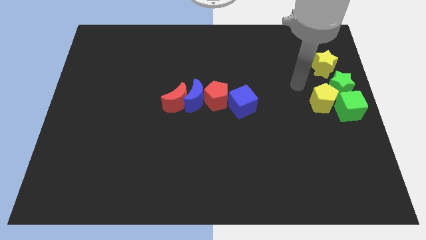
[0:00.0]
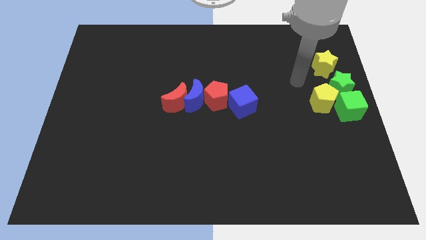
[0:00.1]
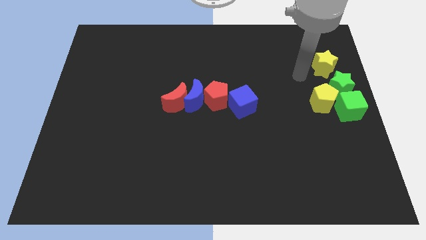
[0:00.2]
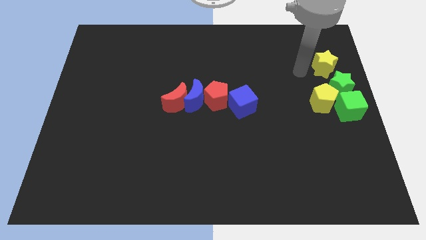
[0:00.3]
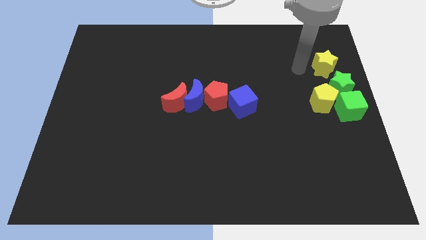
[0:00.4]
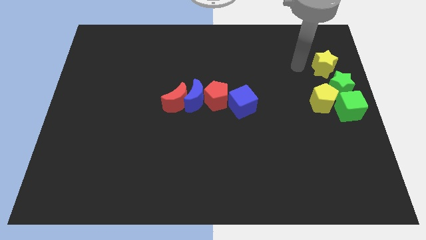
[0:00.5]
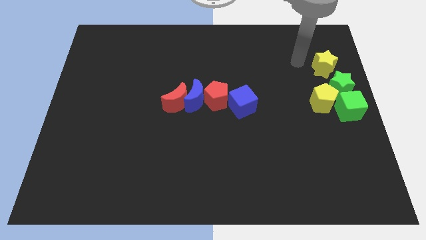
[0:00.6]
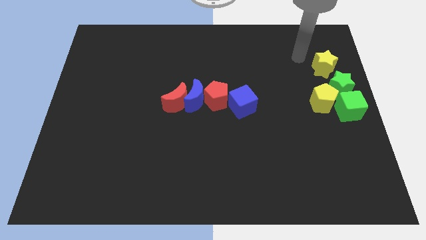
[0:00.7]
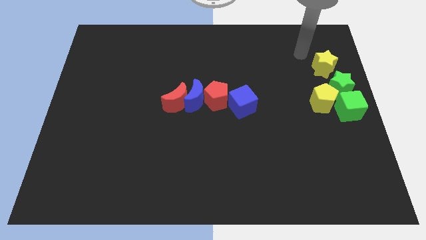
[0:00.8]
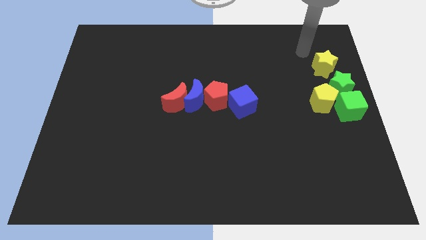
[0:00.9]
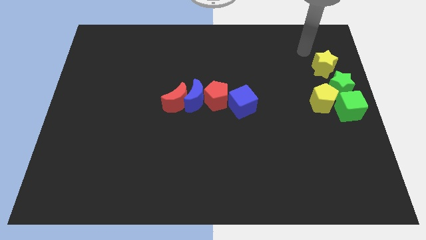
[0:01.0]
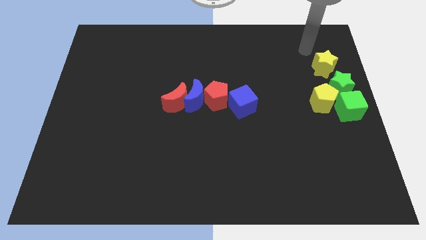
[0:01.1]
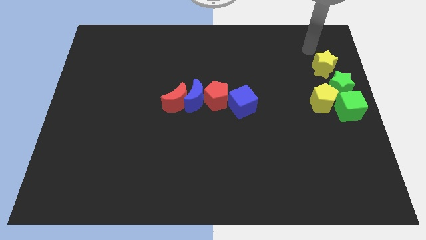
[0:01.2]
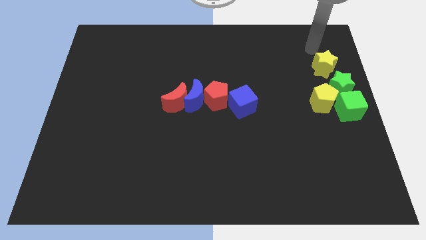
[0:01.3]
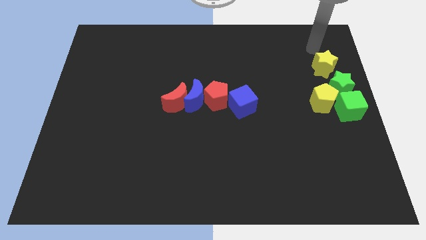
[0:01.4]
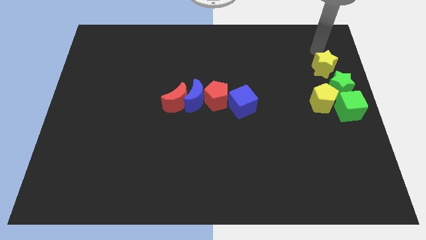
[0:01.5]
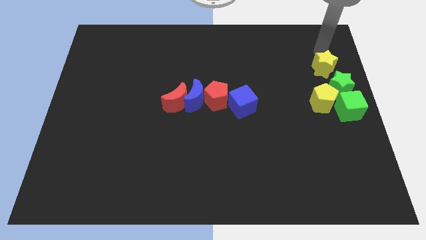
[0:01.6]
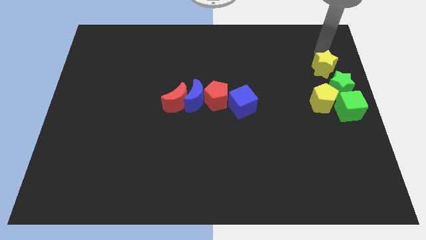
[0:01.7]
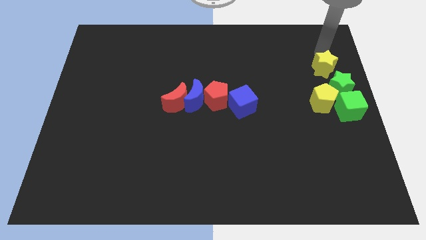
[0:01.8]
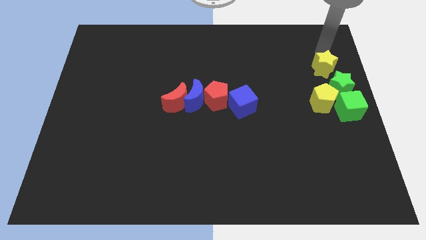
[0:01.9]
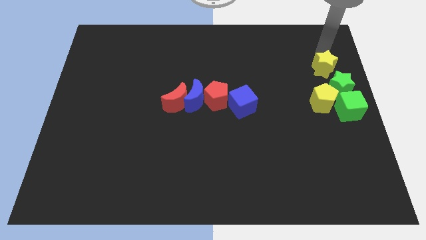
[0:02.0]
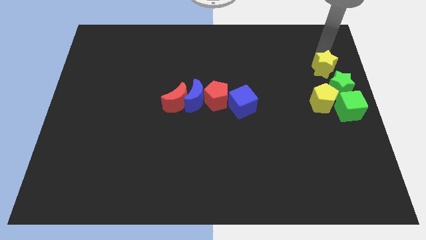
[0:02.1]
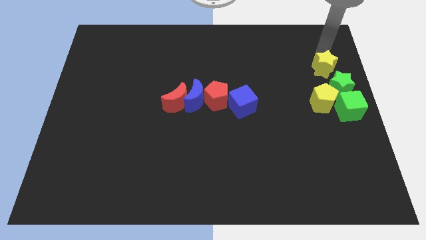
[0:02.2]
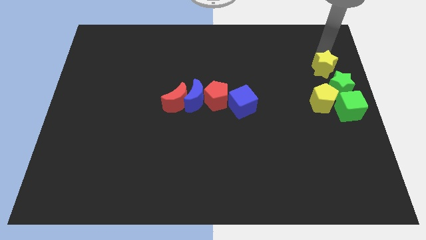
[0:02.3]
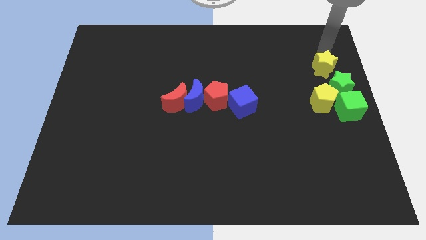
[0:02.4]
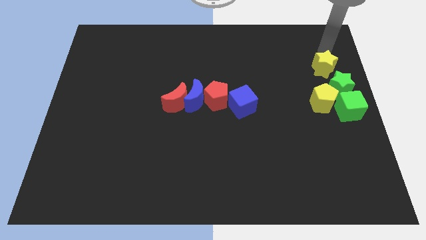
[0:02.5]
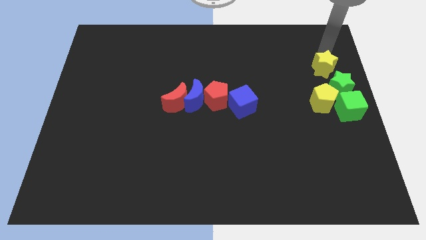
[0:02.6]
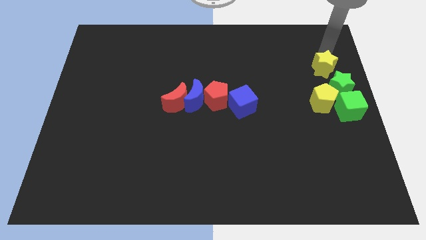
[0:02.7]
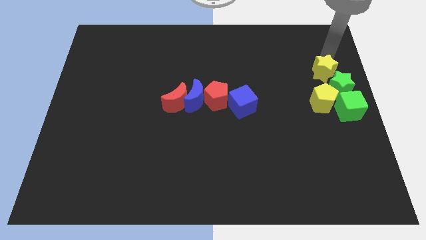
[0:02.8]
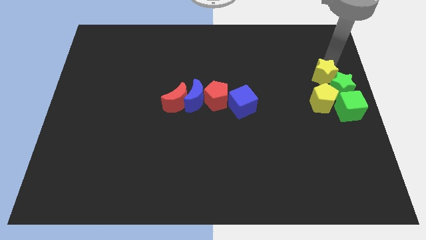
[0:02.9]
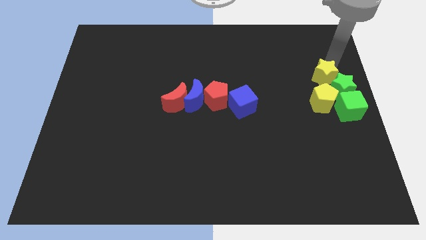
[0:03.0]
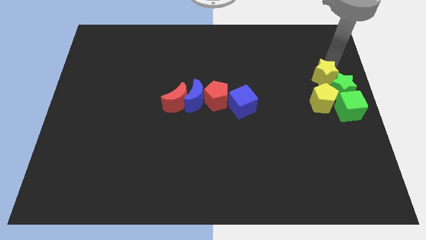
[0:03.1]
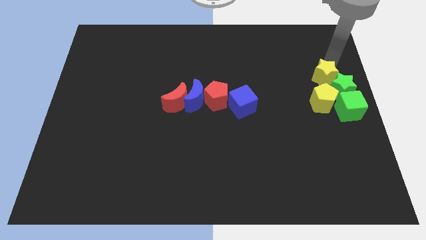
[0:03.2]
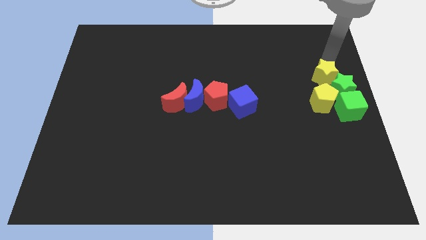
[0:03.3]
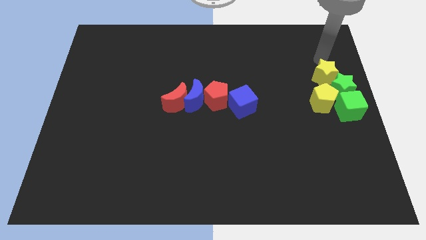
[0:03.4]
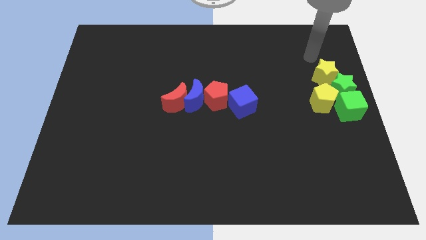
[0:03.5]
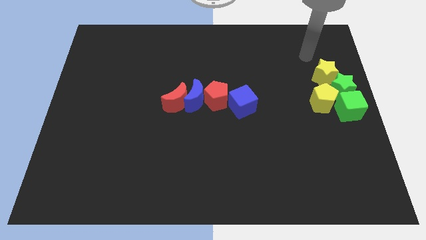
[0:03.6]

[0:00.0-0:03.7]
push the yellow star into the green star

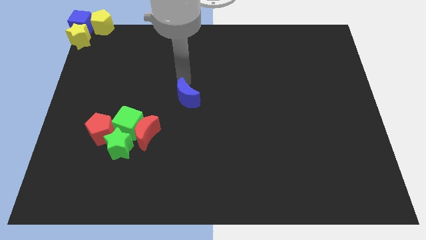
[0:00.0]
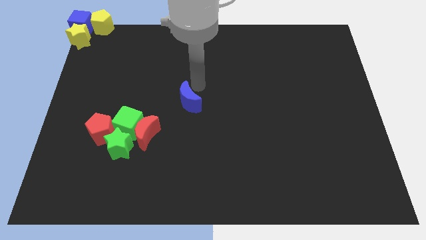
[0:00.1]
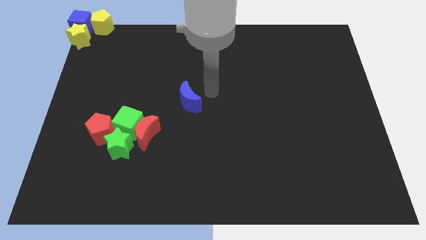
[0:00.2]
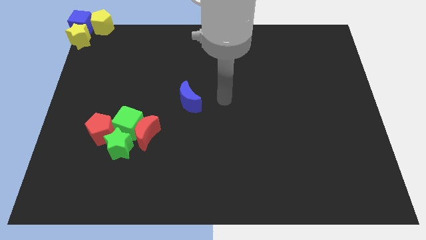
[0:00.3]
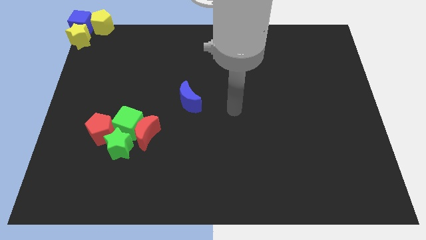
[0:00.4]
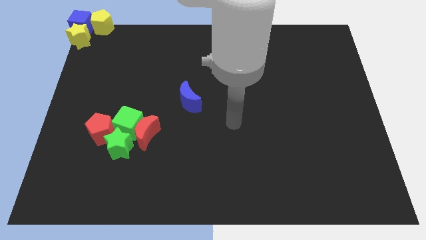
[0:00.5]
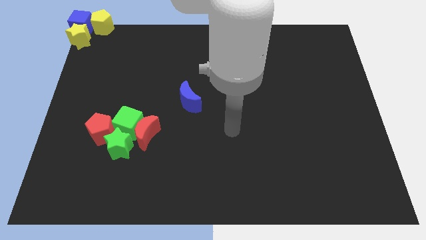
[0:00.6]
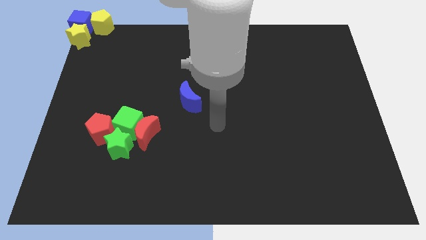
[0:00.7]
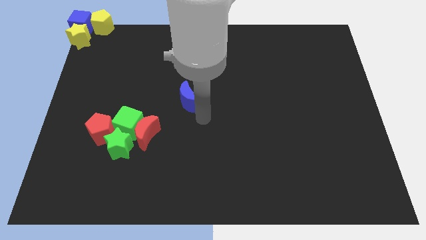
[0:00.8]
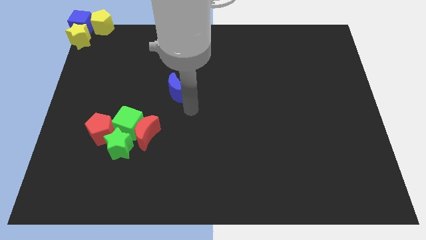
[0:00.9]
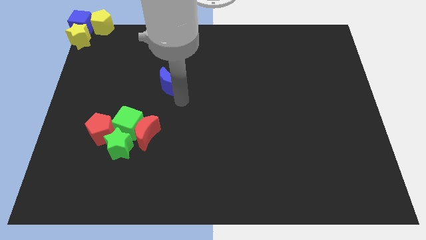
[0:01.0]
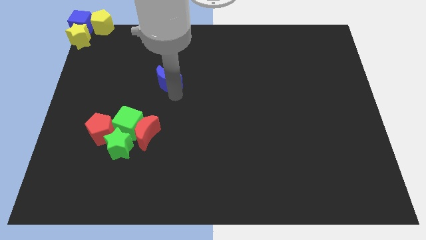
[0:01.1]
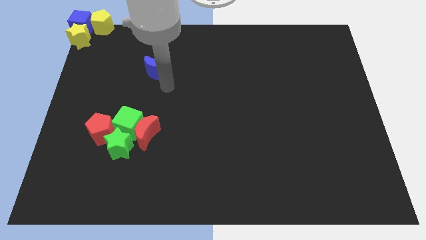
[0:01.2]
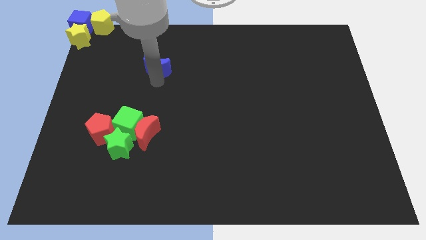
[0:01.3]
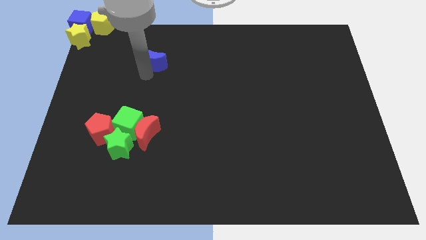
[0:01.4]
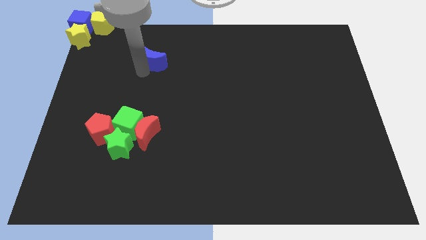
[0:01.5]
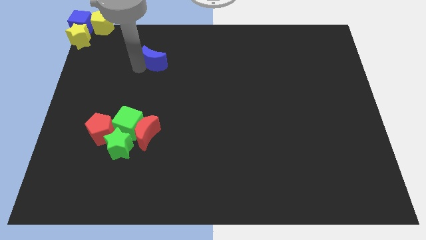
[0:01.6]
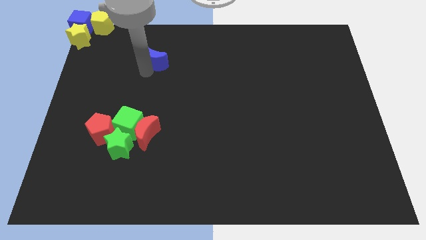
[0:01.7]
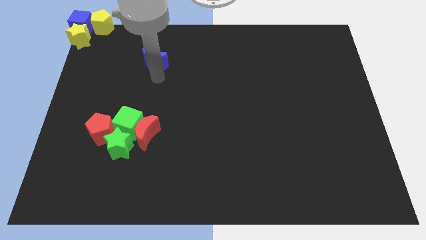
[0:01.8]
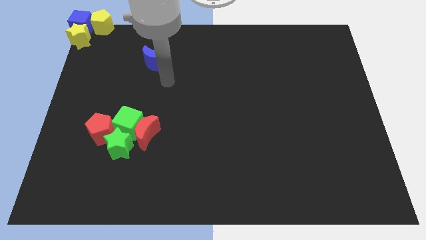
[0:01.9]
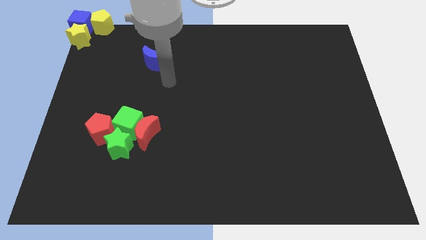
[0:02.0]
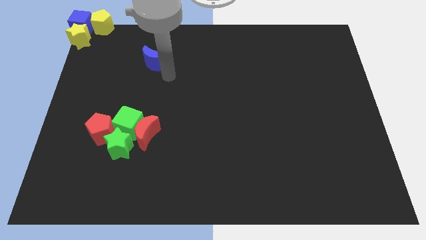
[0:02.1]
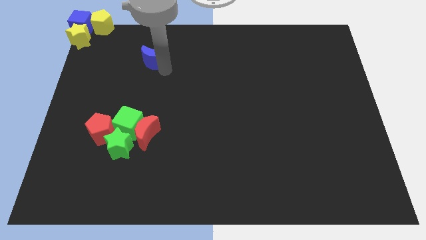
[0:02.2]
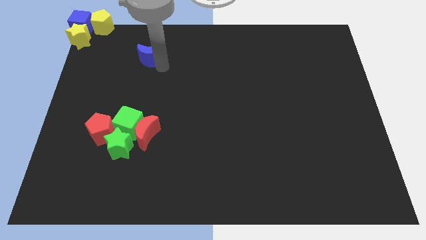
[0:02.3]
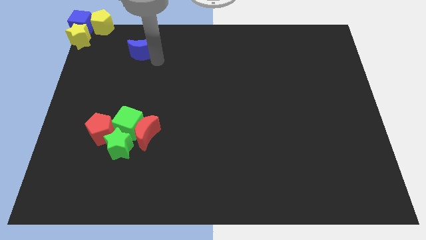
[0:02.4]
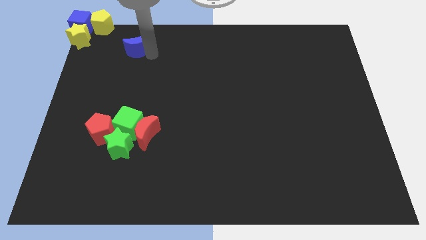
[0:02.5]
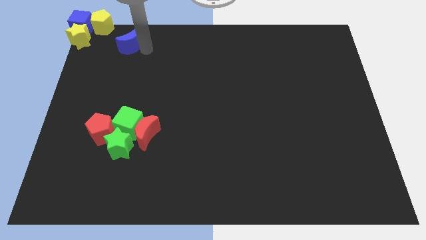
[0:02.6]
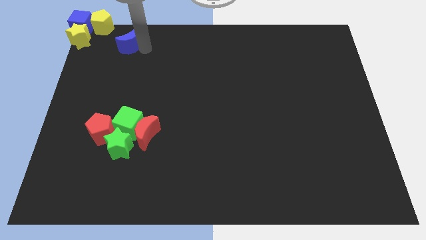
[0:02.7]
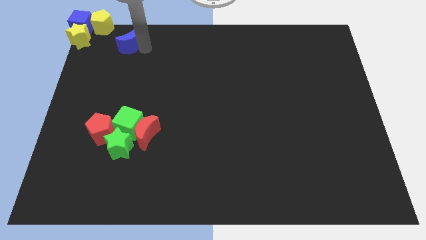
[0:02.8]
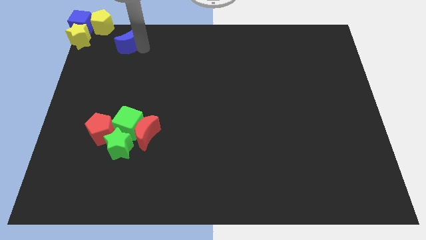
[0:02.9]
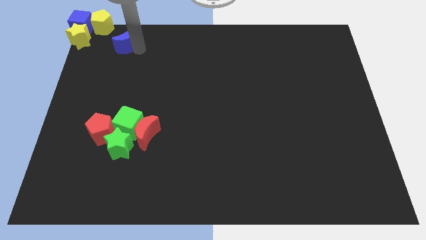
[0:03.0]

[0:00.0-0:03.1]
push the blue moon to the bottom right side of the yellow pentagon

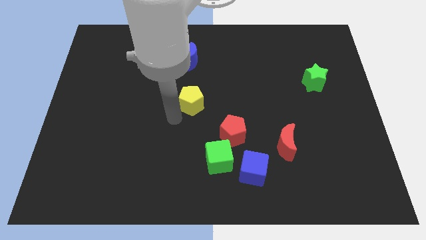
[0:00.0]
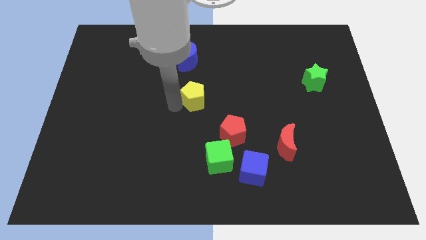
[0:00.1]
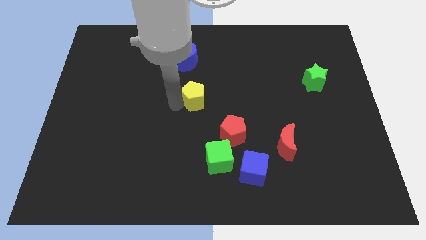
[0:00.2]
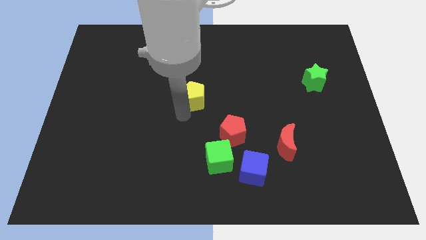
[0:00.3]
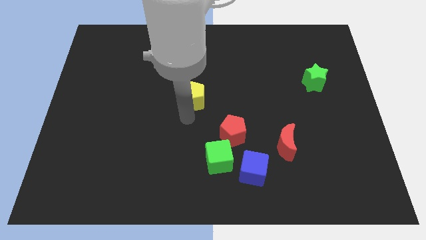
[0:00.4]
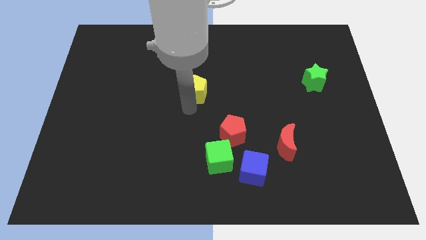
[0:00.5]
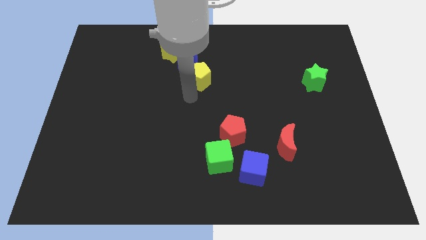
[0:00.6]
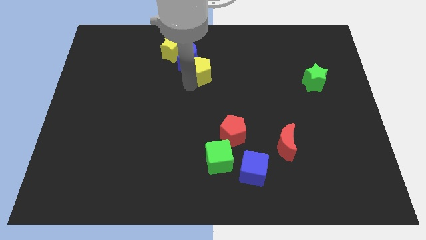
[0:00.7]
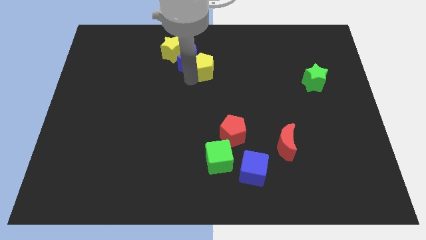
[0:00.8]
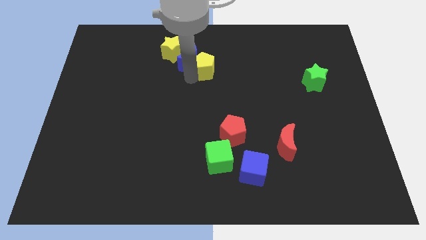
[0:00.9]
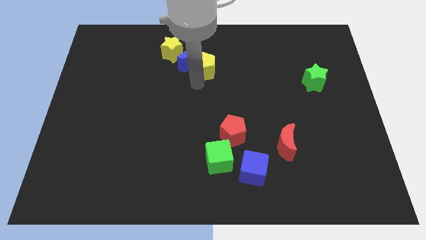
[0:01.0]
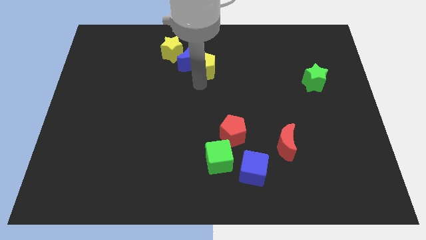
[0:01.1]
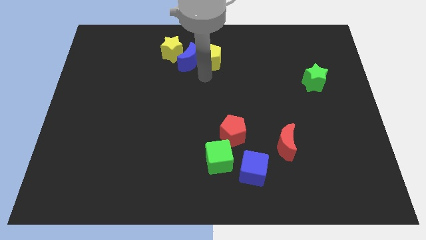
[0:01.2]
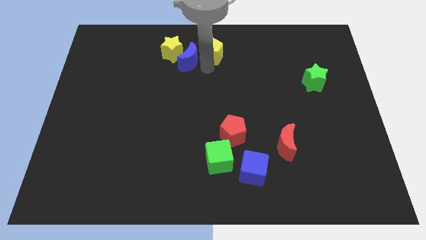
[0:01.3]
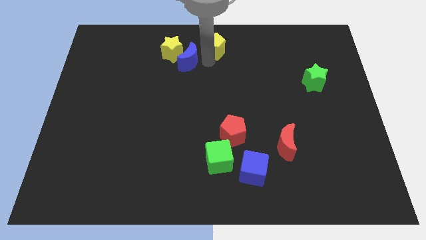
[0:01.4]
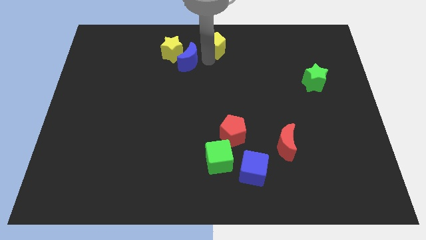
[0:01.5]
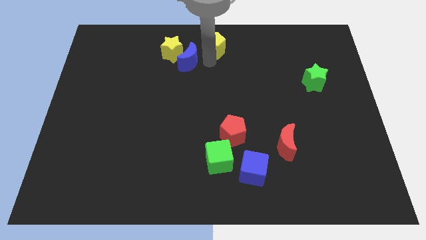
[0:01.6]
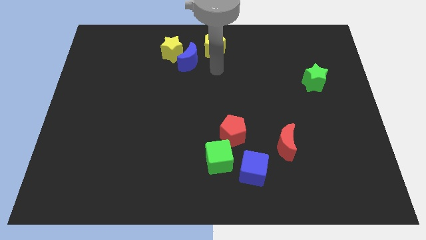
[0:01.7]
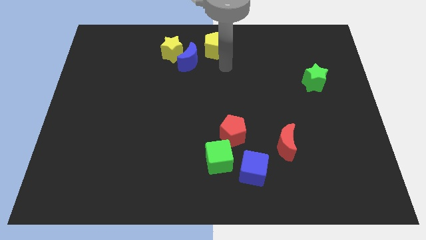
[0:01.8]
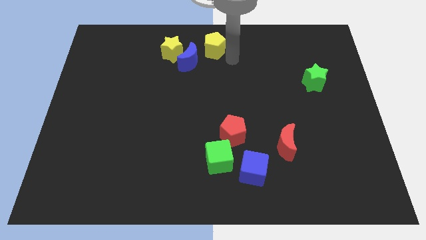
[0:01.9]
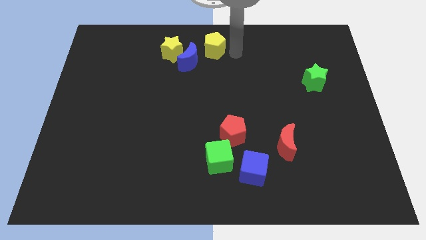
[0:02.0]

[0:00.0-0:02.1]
slide yellow pentagon towards top center
